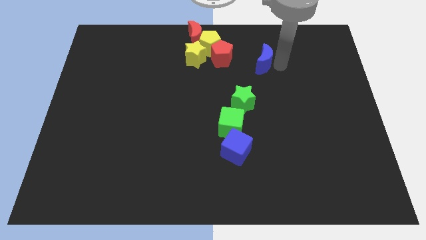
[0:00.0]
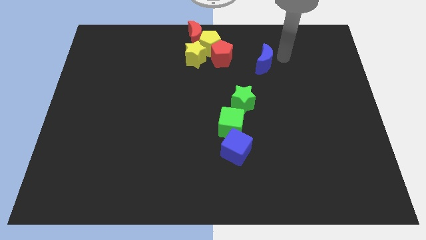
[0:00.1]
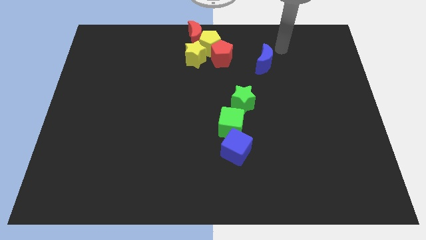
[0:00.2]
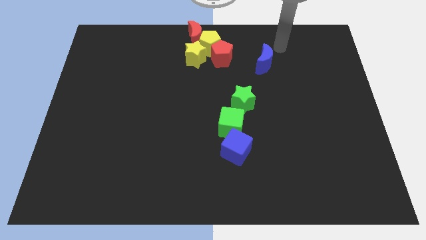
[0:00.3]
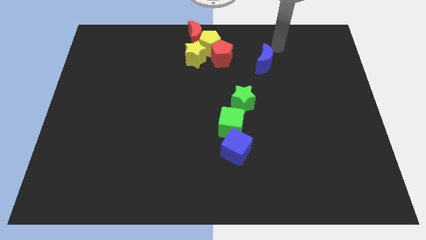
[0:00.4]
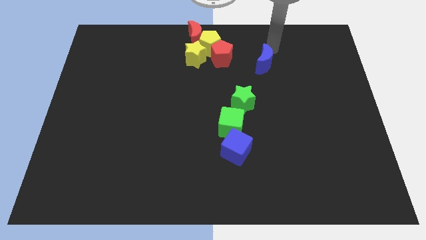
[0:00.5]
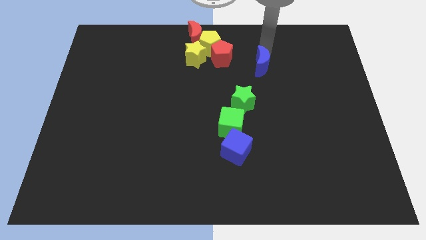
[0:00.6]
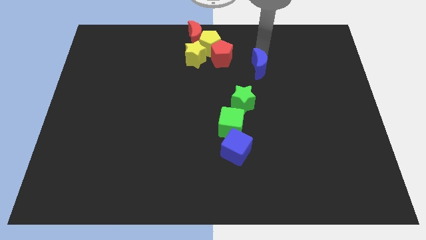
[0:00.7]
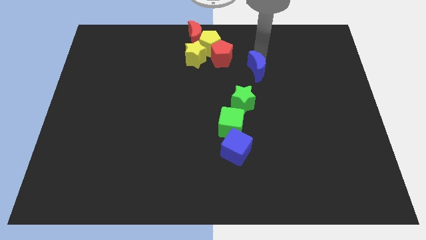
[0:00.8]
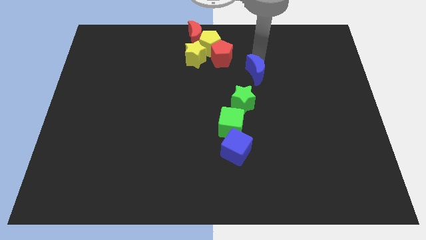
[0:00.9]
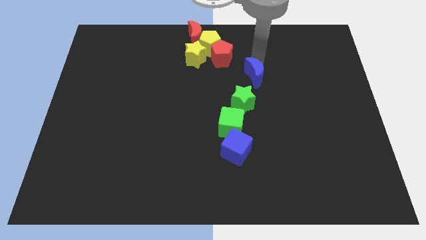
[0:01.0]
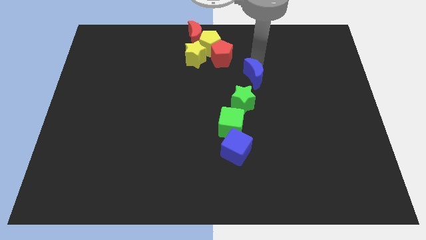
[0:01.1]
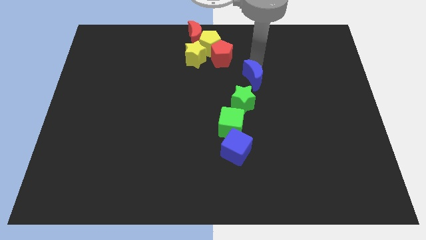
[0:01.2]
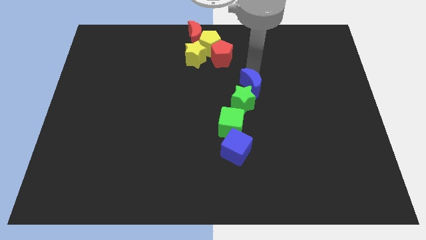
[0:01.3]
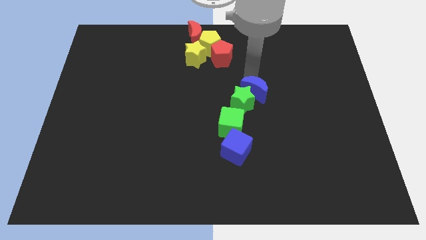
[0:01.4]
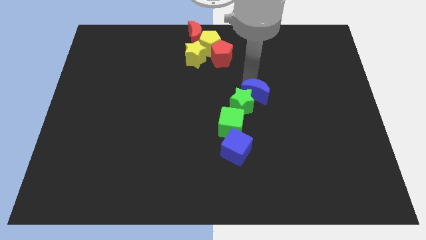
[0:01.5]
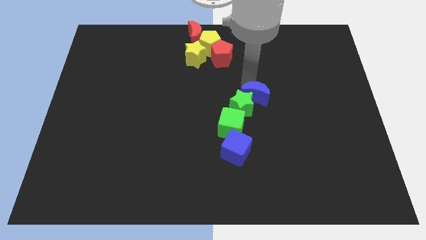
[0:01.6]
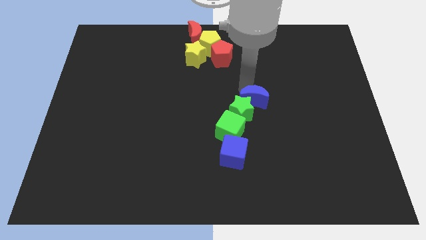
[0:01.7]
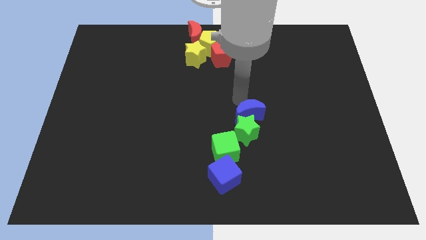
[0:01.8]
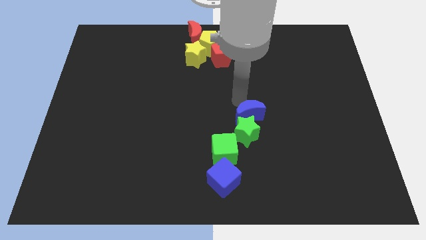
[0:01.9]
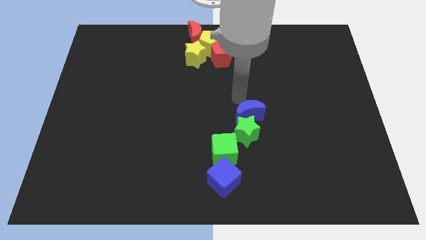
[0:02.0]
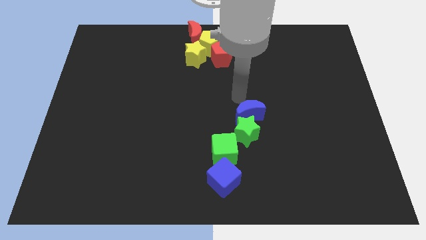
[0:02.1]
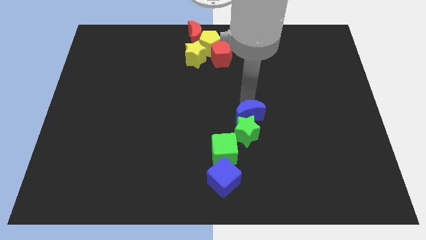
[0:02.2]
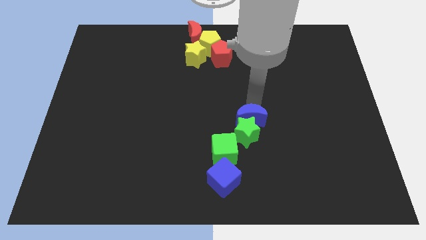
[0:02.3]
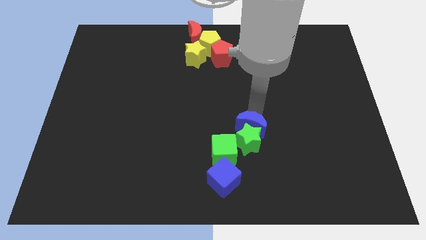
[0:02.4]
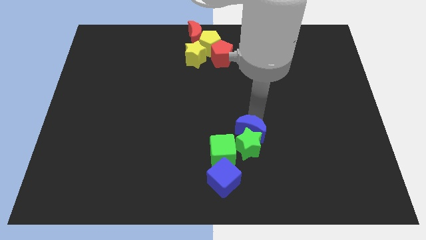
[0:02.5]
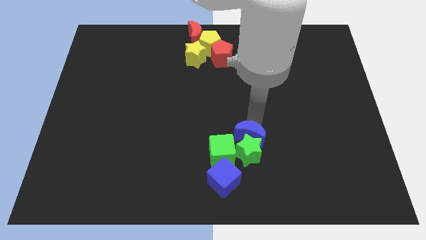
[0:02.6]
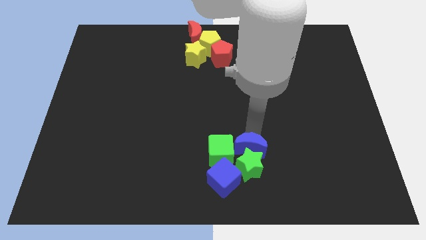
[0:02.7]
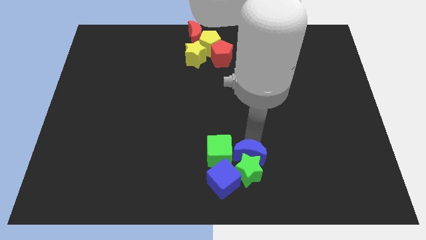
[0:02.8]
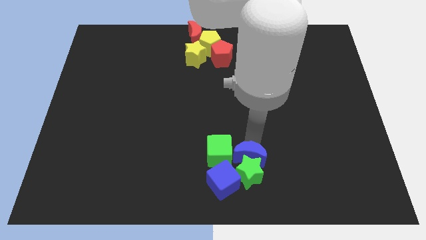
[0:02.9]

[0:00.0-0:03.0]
push a group of blocks downward

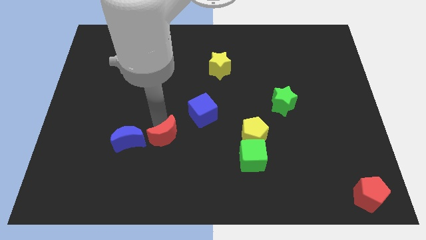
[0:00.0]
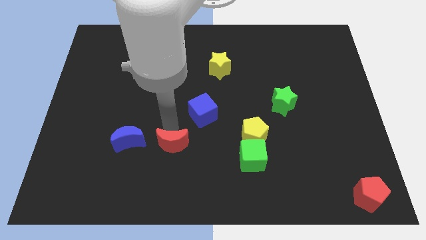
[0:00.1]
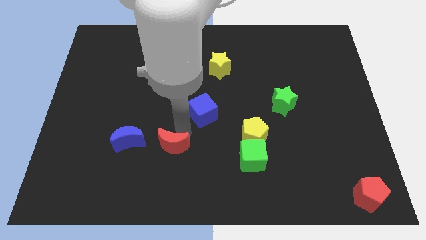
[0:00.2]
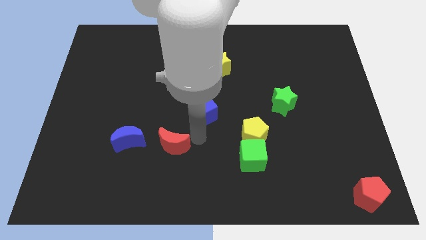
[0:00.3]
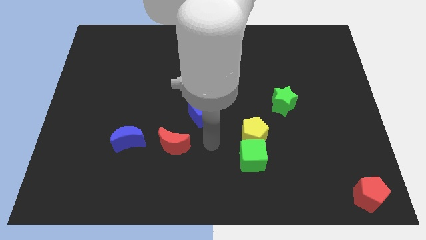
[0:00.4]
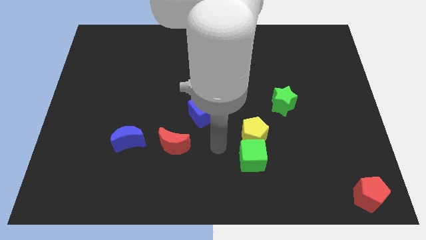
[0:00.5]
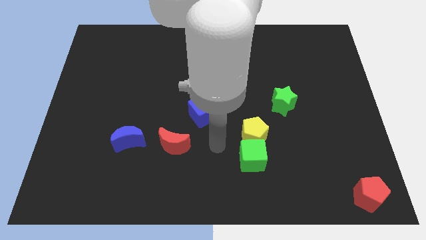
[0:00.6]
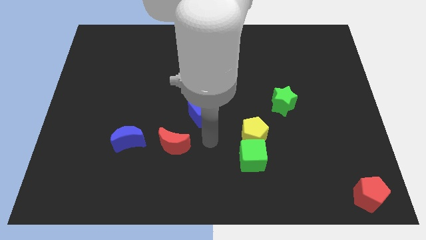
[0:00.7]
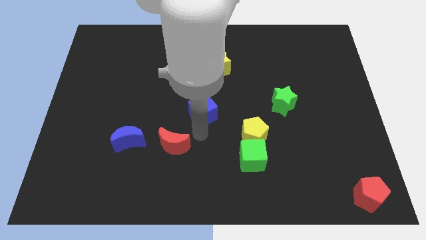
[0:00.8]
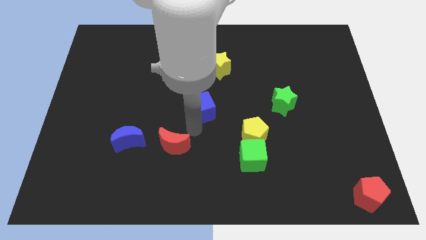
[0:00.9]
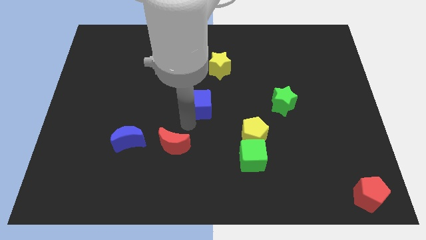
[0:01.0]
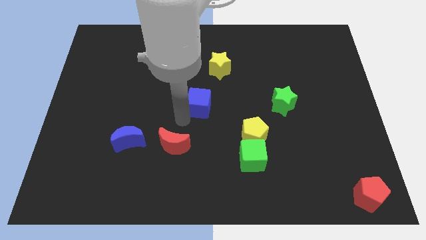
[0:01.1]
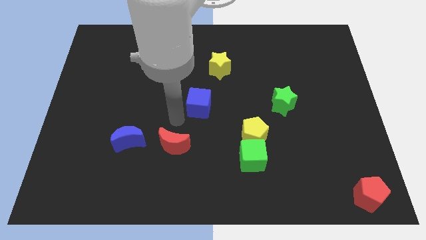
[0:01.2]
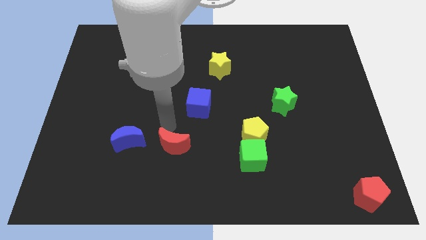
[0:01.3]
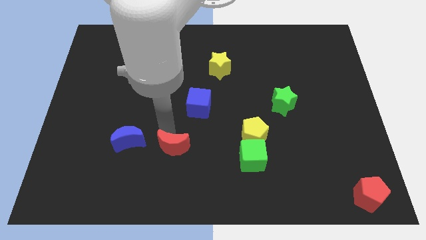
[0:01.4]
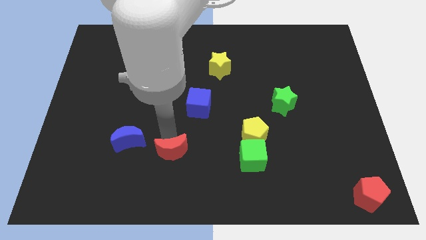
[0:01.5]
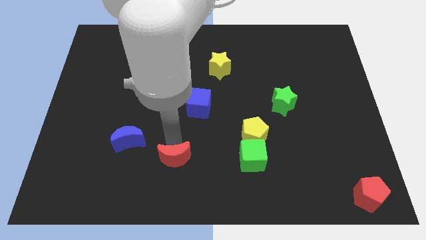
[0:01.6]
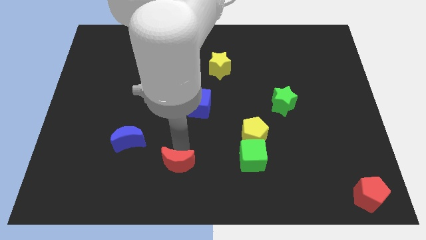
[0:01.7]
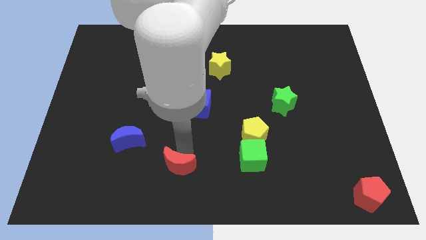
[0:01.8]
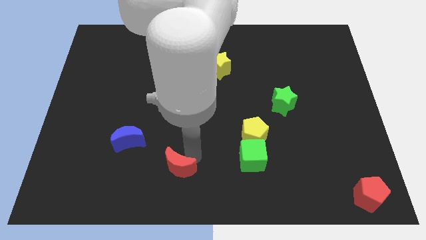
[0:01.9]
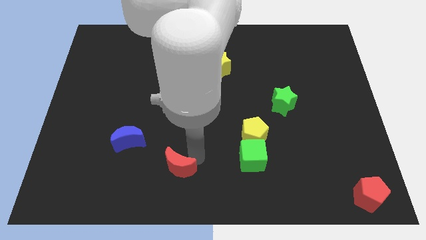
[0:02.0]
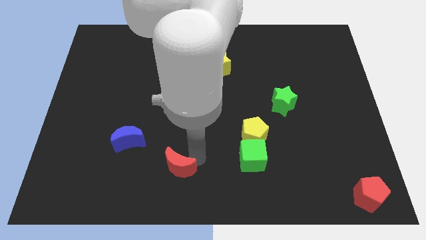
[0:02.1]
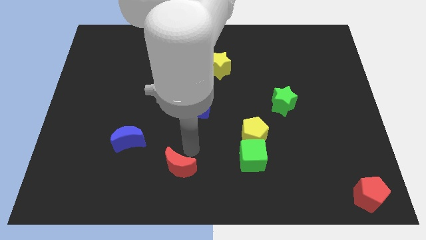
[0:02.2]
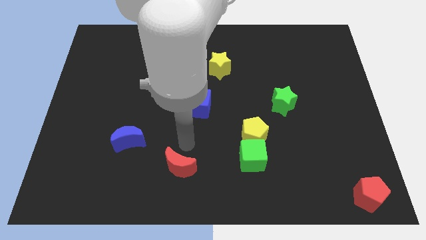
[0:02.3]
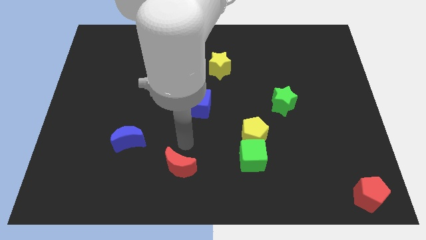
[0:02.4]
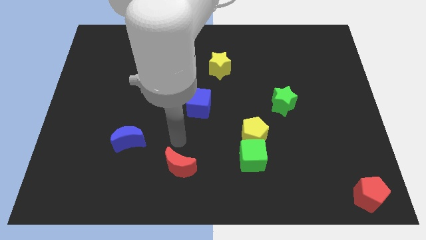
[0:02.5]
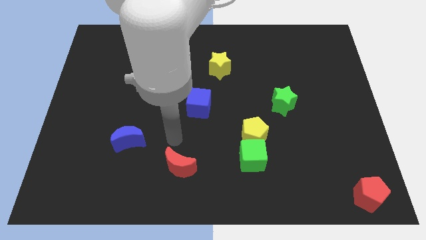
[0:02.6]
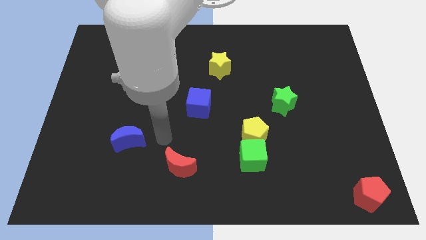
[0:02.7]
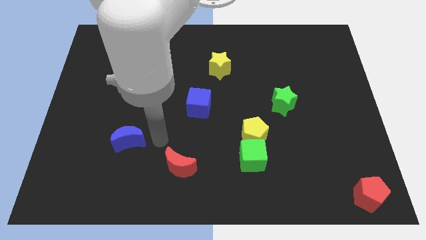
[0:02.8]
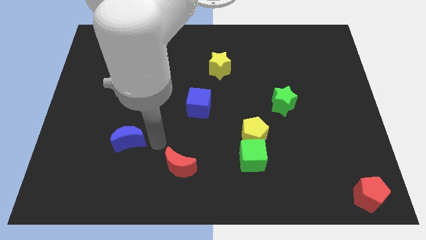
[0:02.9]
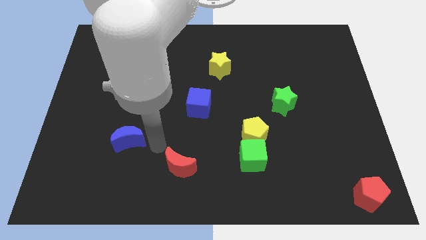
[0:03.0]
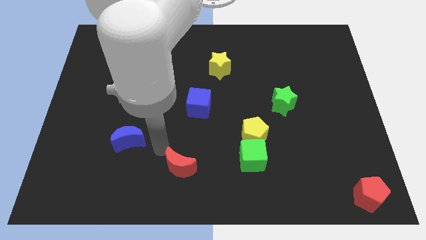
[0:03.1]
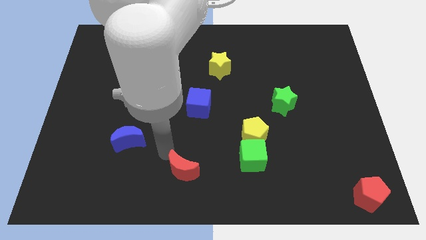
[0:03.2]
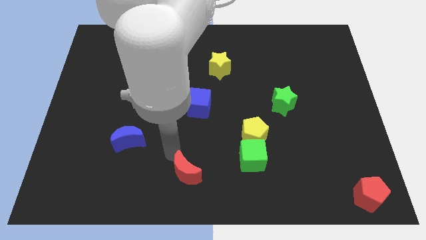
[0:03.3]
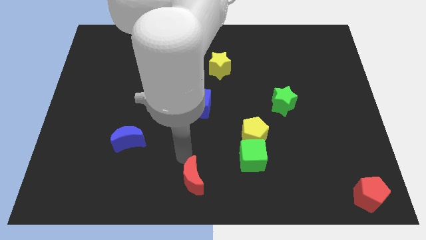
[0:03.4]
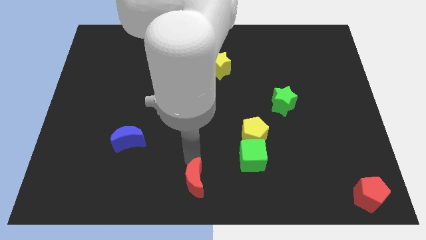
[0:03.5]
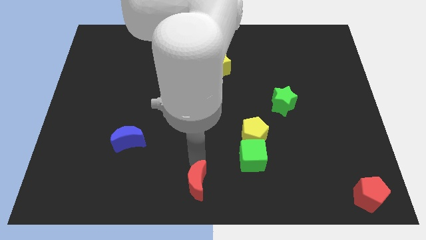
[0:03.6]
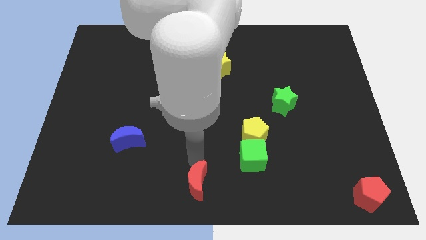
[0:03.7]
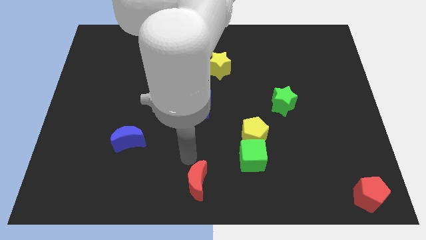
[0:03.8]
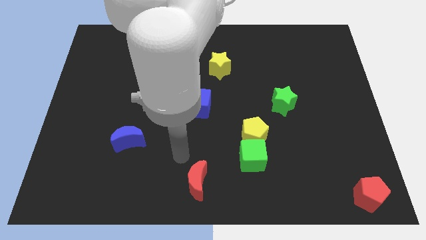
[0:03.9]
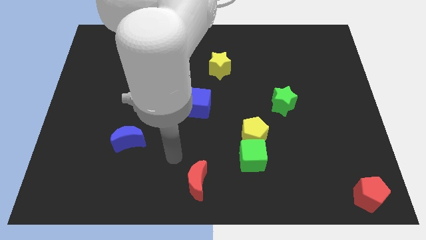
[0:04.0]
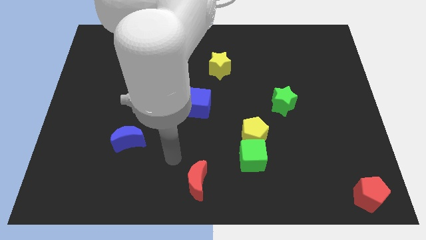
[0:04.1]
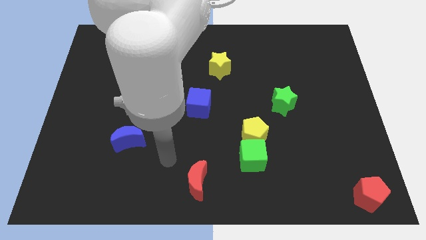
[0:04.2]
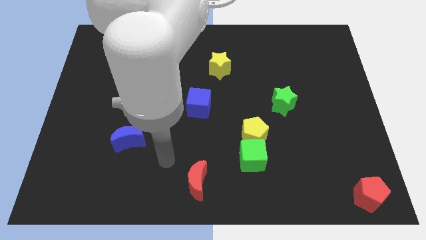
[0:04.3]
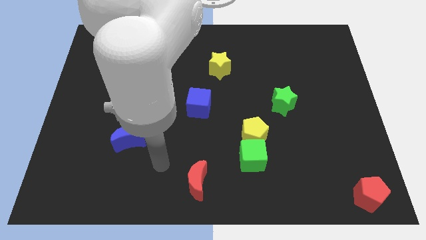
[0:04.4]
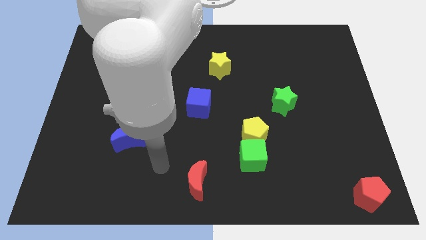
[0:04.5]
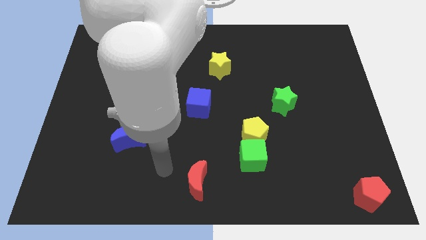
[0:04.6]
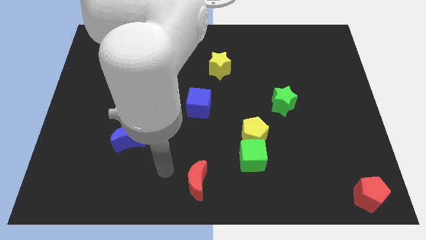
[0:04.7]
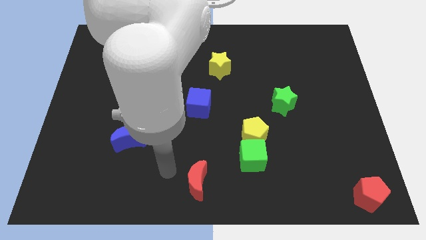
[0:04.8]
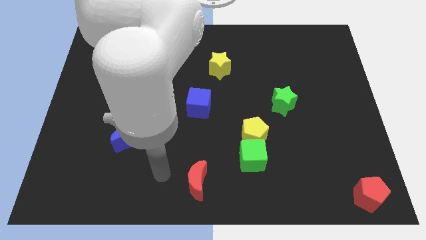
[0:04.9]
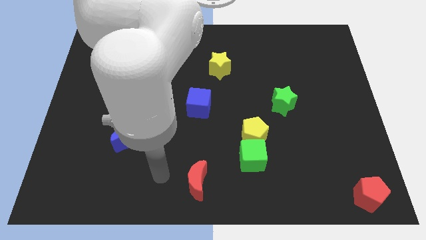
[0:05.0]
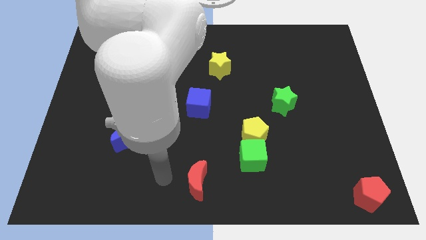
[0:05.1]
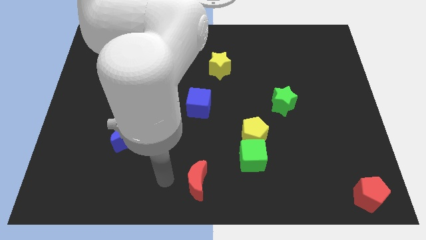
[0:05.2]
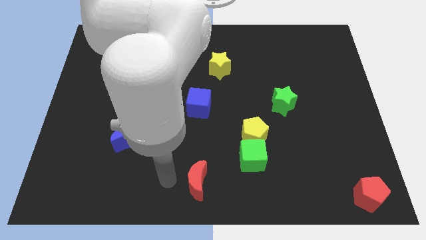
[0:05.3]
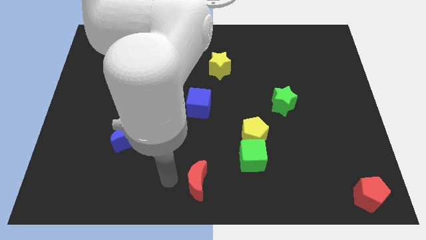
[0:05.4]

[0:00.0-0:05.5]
move red moon to the bottom left

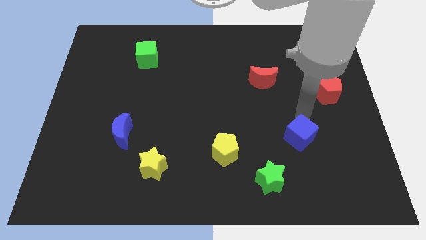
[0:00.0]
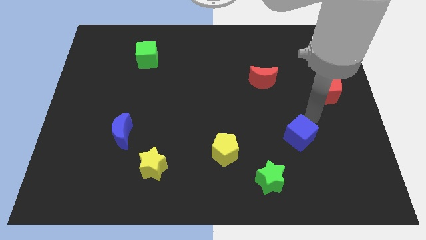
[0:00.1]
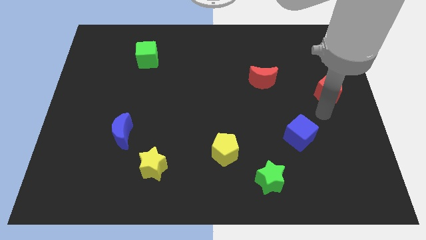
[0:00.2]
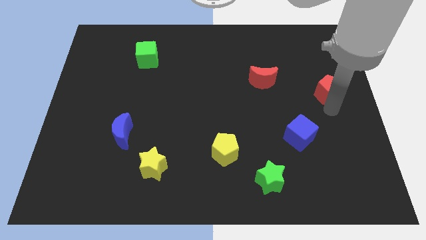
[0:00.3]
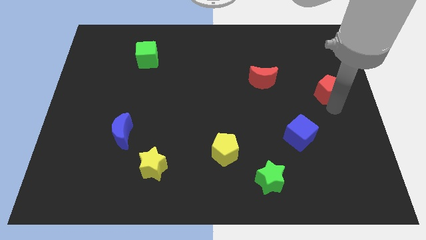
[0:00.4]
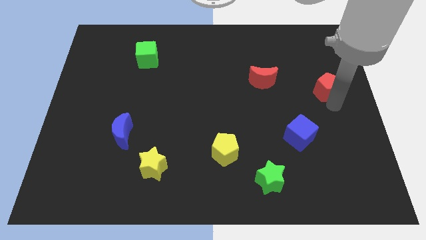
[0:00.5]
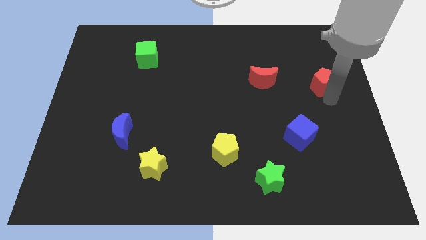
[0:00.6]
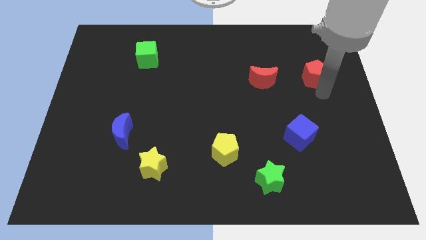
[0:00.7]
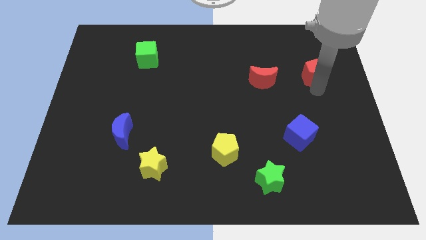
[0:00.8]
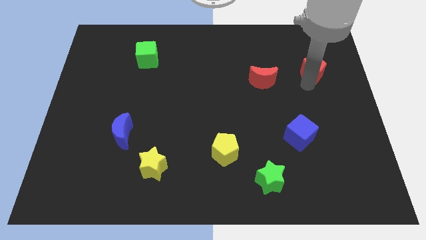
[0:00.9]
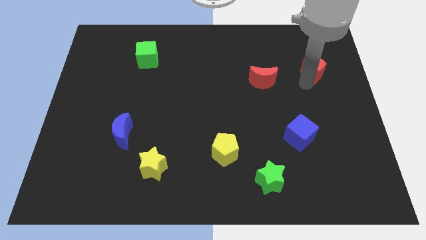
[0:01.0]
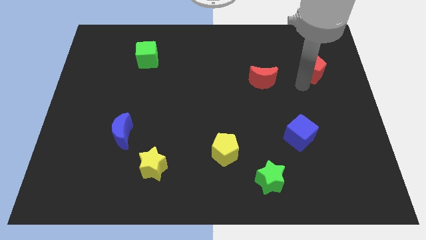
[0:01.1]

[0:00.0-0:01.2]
put the red pentagon to the right of the red crescent
